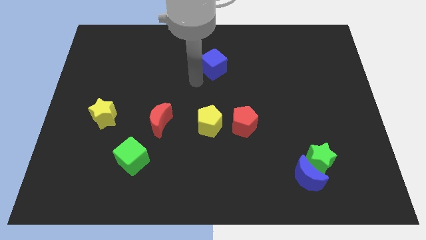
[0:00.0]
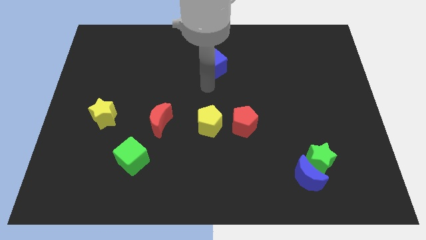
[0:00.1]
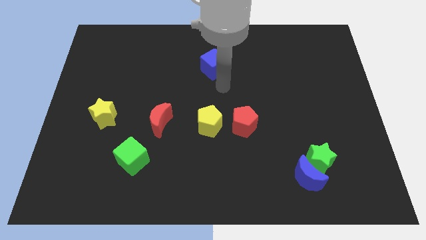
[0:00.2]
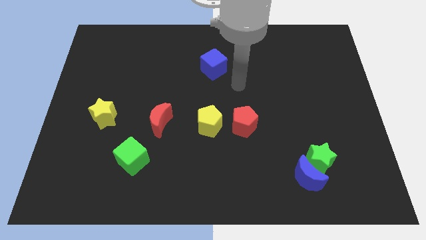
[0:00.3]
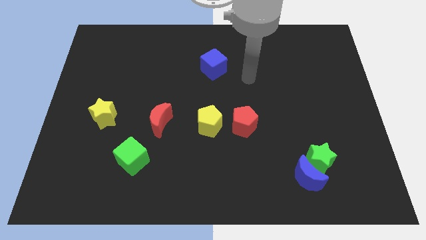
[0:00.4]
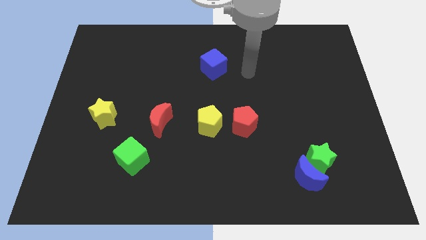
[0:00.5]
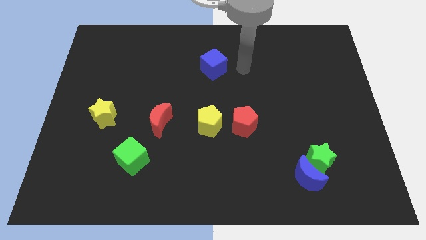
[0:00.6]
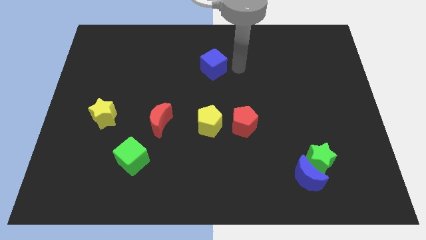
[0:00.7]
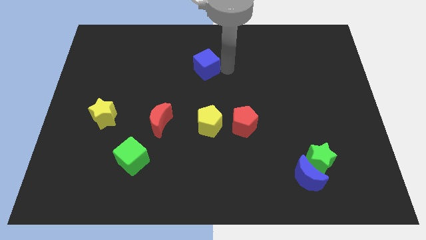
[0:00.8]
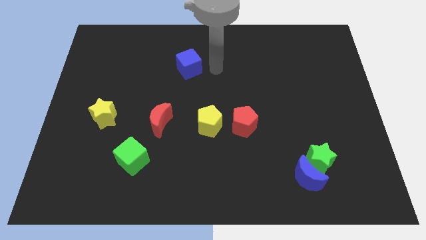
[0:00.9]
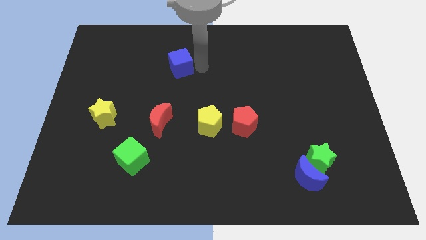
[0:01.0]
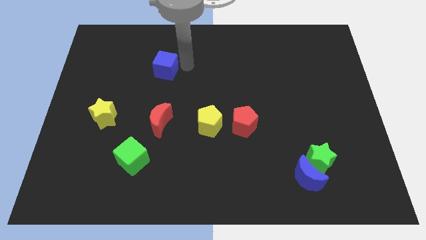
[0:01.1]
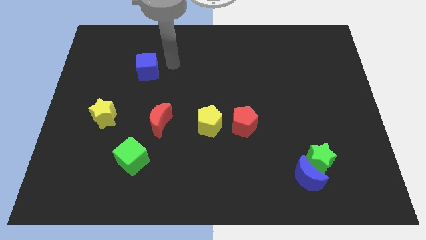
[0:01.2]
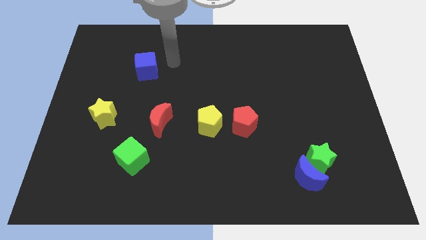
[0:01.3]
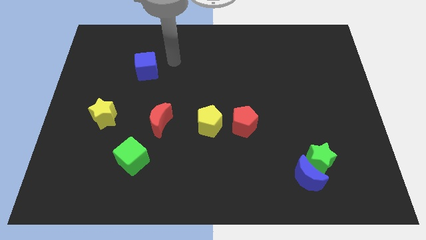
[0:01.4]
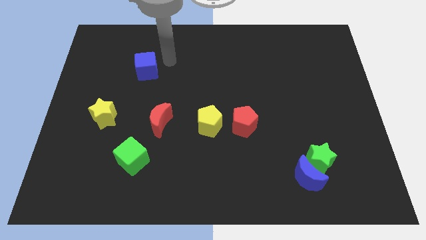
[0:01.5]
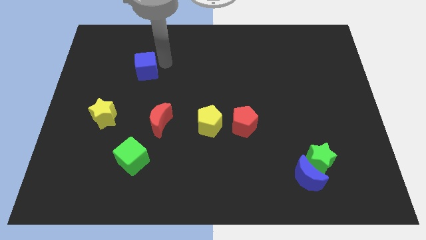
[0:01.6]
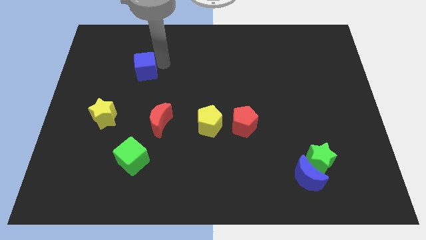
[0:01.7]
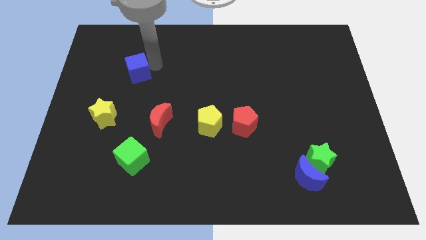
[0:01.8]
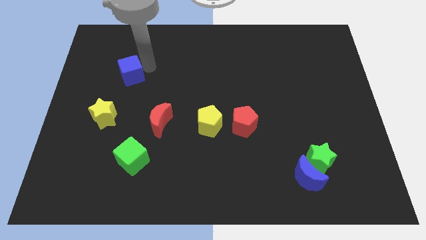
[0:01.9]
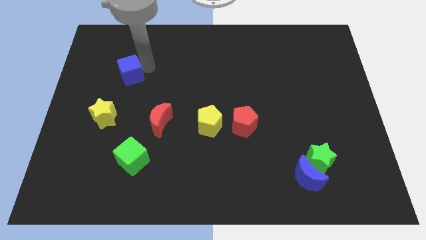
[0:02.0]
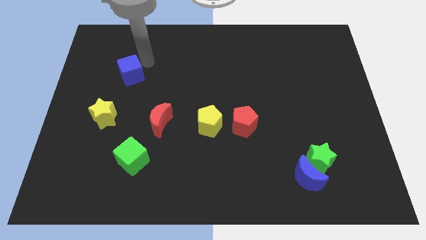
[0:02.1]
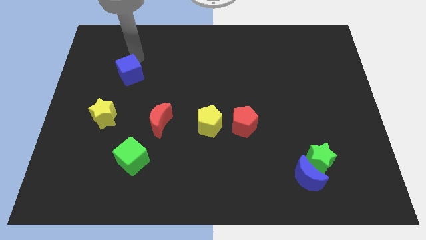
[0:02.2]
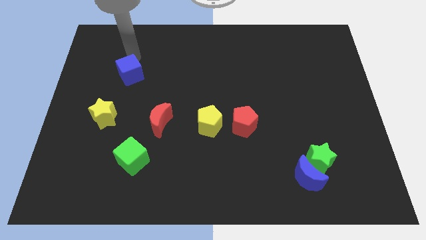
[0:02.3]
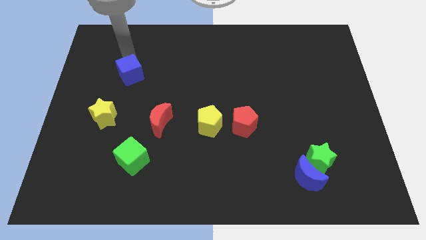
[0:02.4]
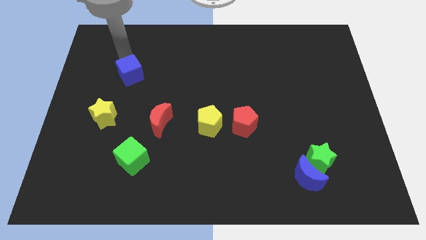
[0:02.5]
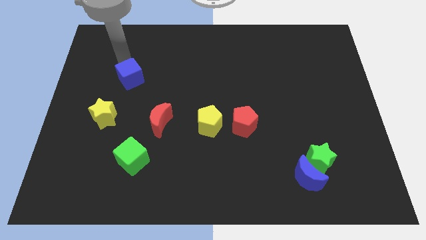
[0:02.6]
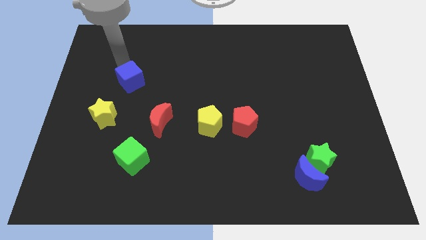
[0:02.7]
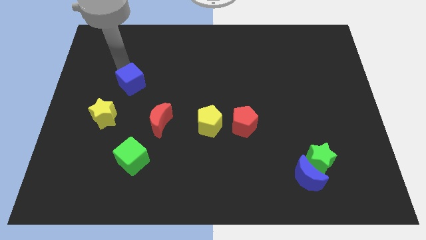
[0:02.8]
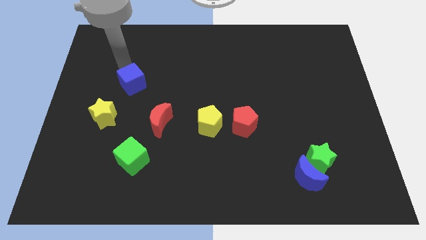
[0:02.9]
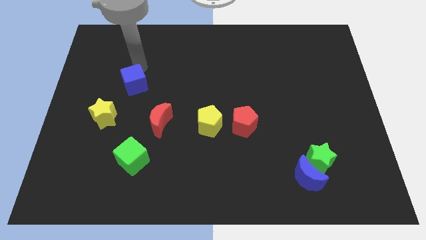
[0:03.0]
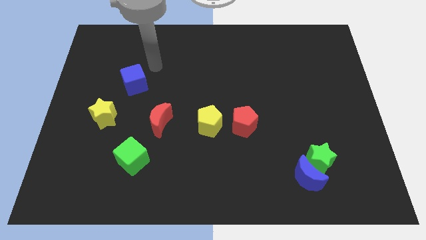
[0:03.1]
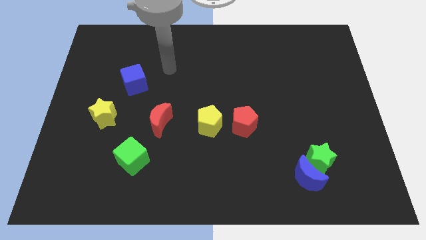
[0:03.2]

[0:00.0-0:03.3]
move the blue cube towards the yellow star

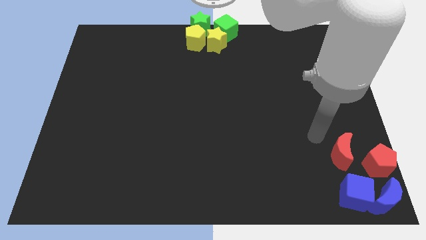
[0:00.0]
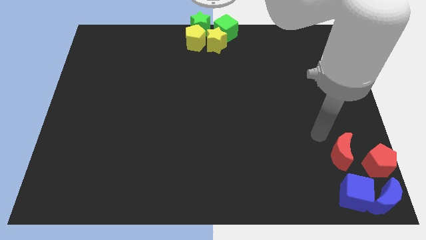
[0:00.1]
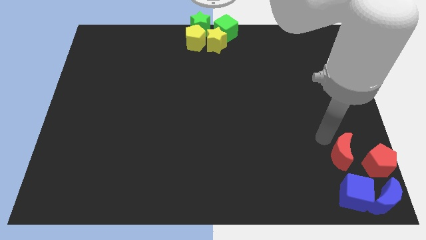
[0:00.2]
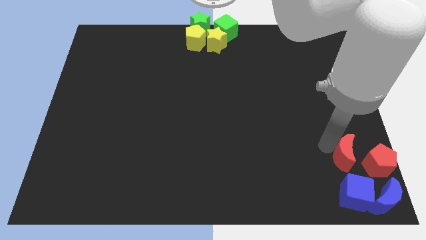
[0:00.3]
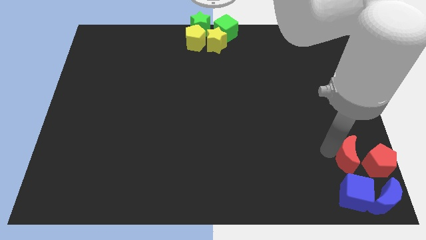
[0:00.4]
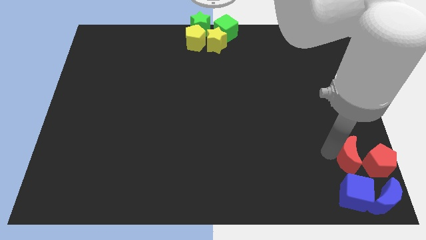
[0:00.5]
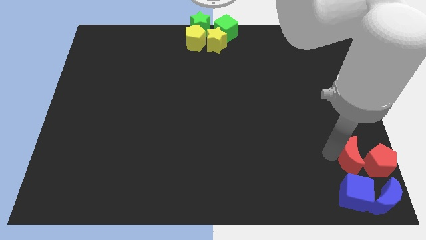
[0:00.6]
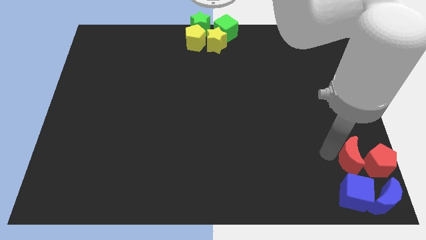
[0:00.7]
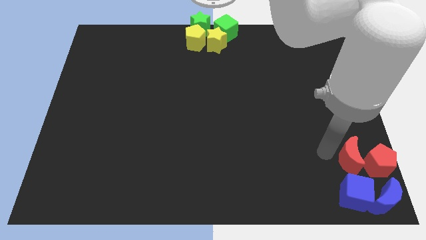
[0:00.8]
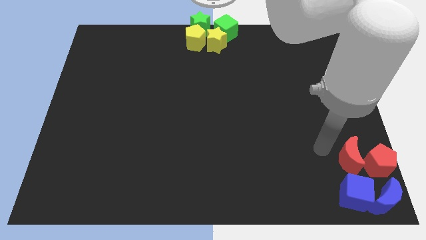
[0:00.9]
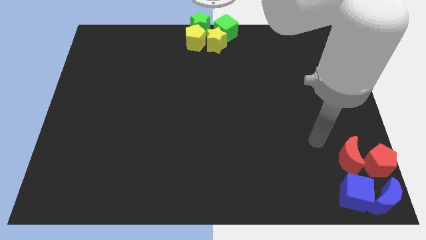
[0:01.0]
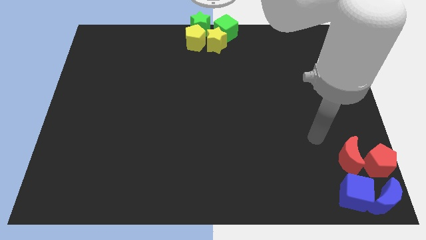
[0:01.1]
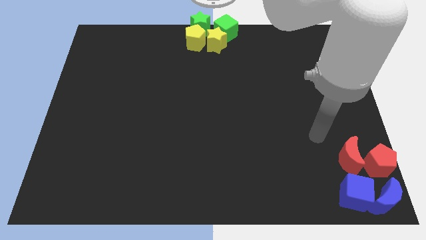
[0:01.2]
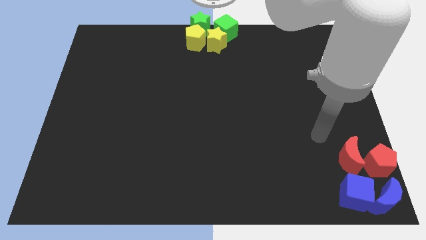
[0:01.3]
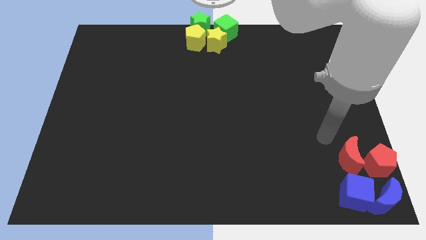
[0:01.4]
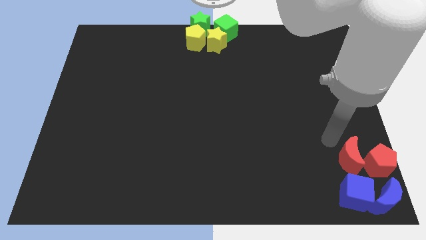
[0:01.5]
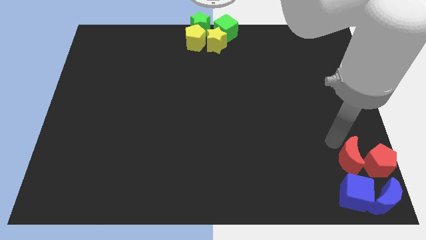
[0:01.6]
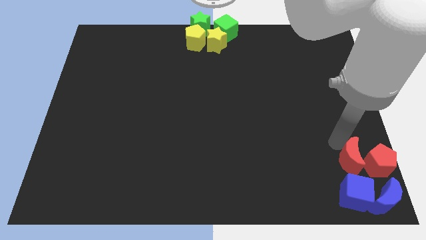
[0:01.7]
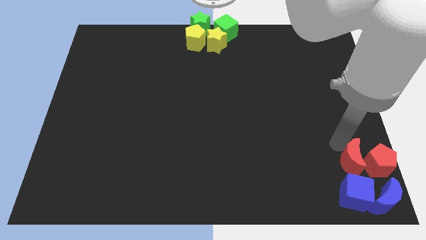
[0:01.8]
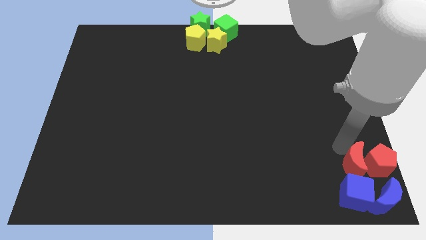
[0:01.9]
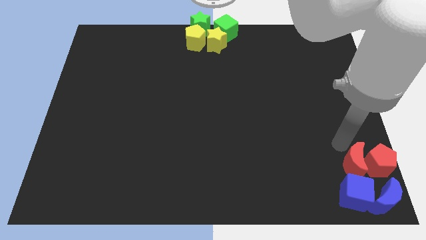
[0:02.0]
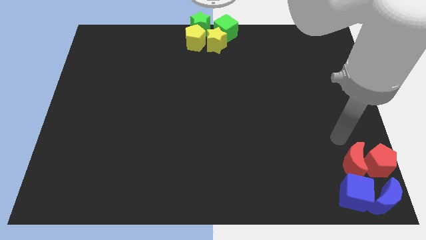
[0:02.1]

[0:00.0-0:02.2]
place the red moon at the top of blue cube

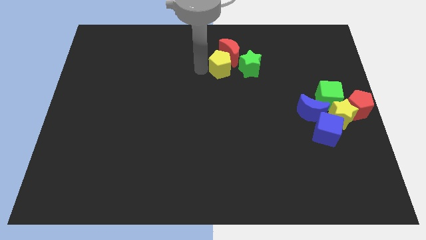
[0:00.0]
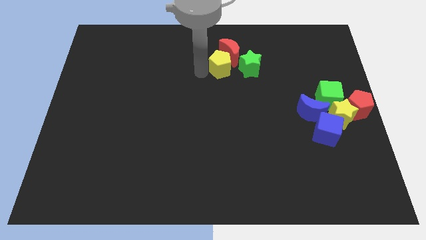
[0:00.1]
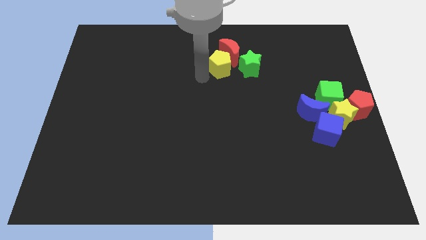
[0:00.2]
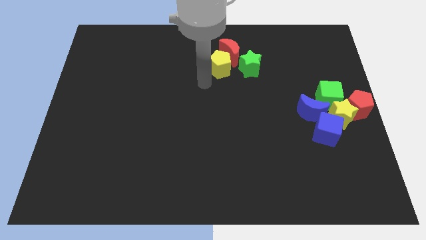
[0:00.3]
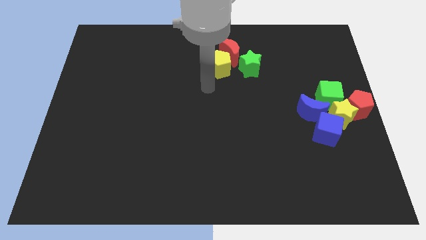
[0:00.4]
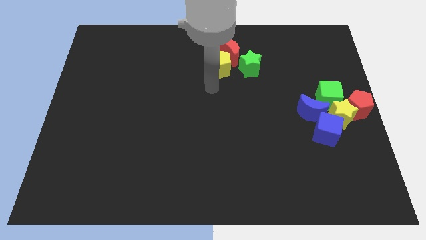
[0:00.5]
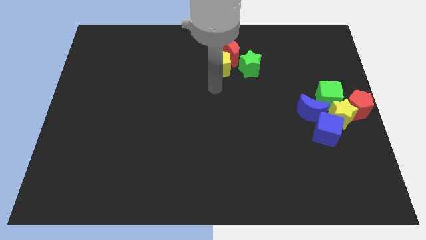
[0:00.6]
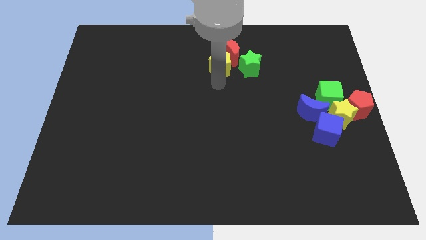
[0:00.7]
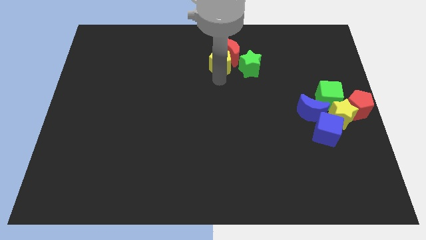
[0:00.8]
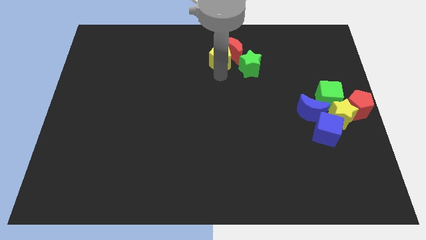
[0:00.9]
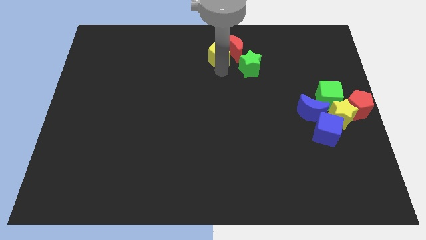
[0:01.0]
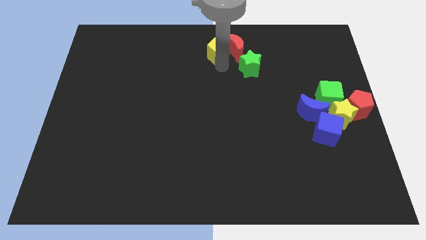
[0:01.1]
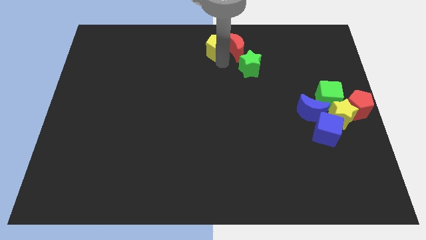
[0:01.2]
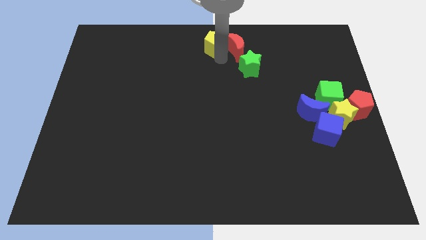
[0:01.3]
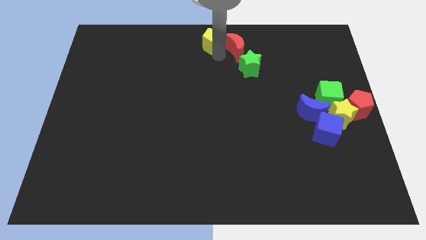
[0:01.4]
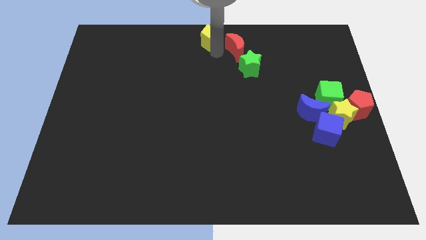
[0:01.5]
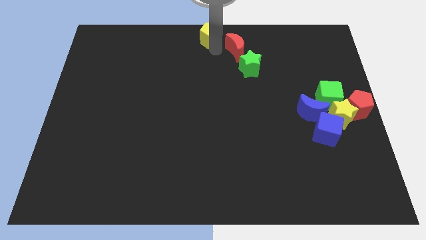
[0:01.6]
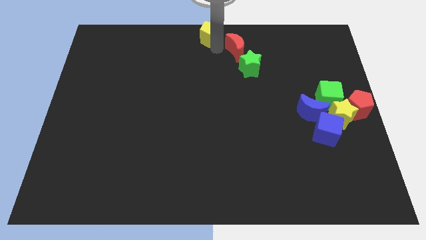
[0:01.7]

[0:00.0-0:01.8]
push the yellow pentagon towards the top center of the board

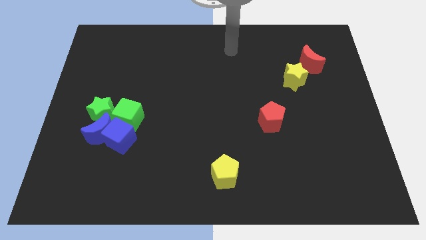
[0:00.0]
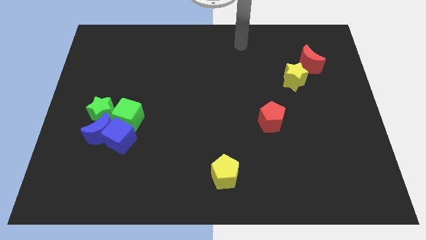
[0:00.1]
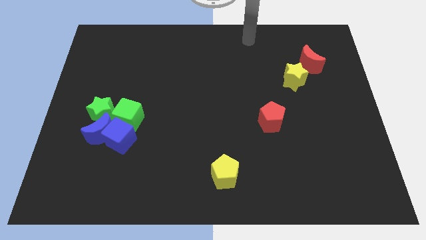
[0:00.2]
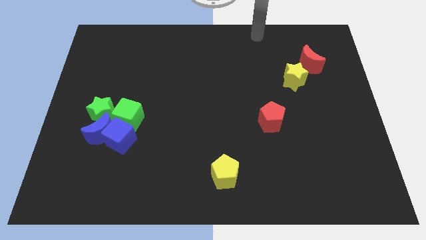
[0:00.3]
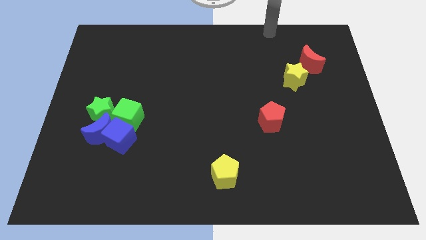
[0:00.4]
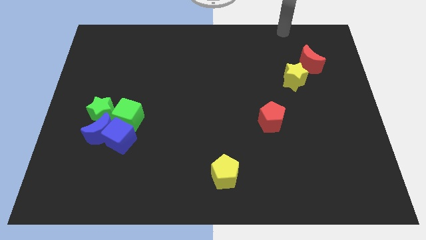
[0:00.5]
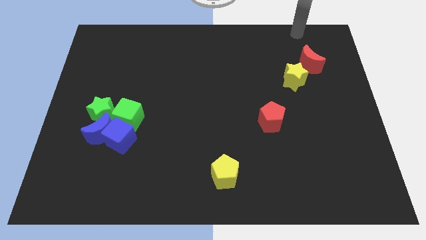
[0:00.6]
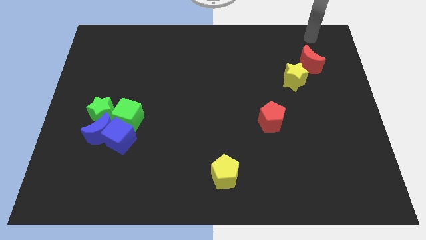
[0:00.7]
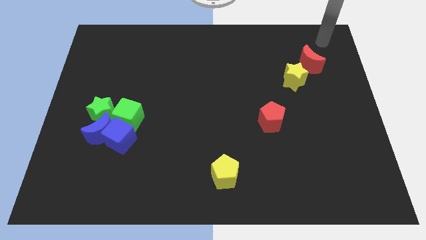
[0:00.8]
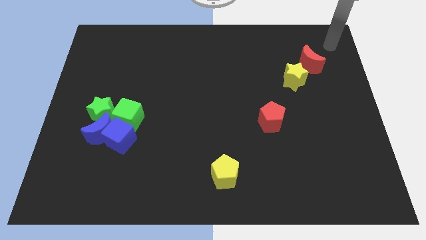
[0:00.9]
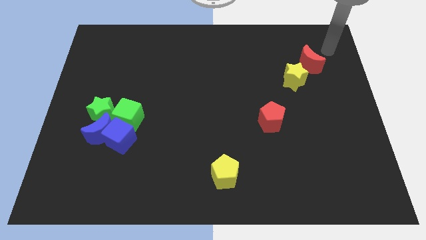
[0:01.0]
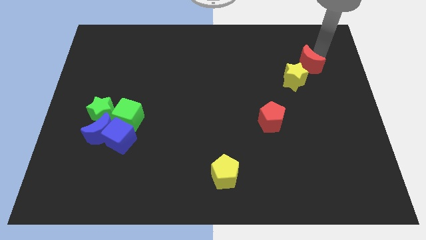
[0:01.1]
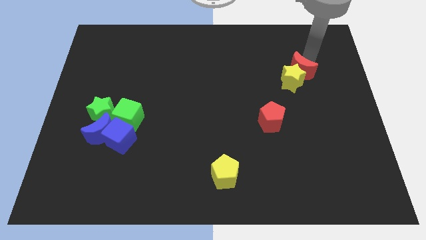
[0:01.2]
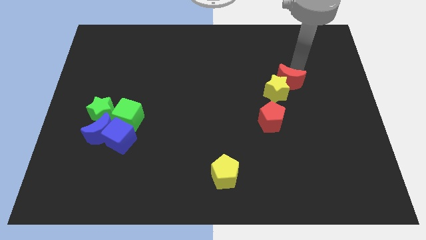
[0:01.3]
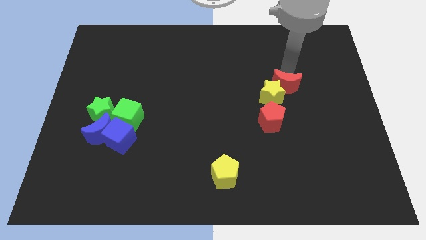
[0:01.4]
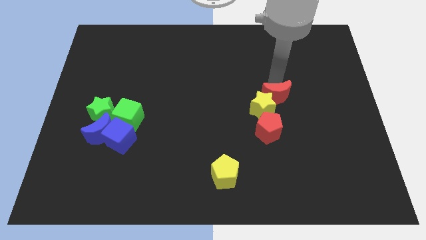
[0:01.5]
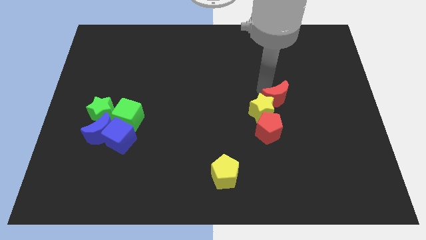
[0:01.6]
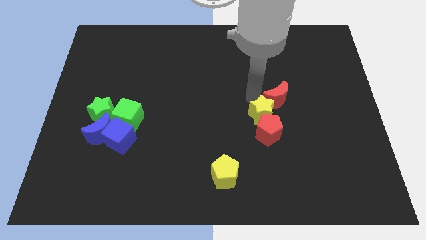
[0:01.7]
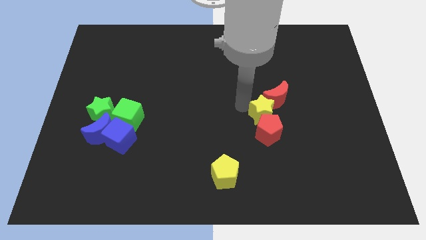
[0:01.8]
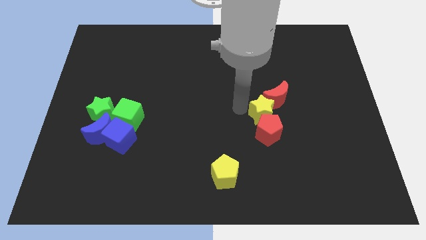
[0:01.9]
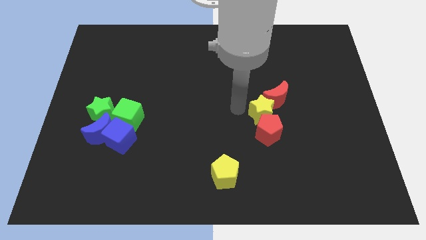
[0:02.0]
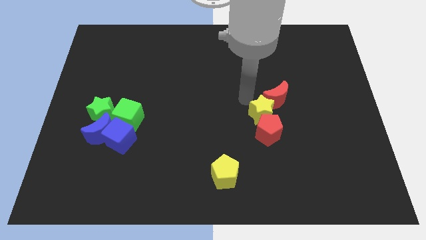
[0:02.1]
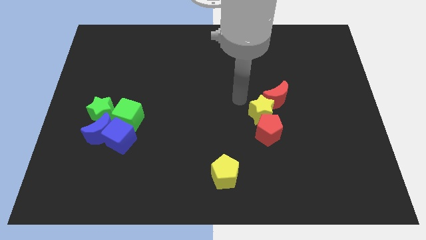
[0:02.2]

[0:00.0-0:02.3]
push the red crescent along with the yellow star into the red pentagon
